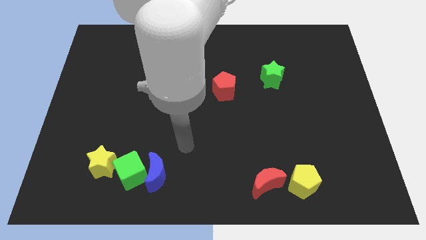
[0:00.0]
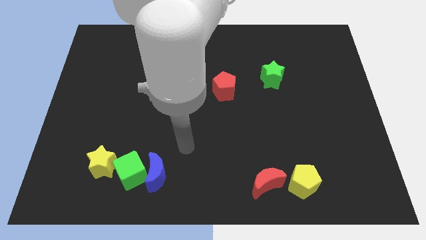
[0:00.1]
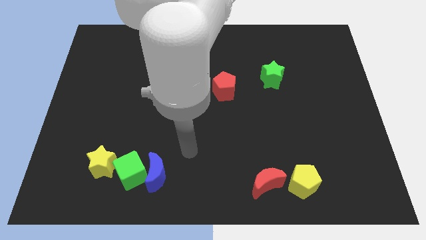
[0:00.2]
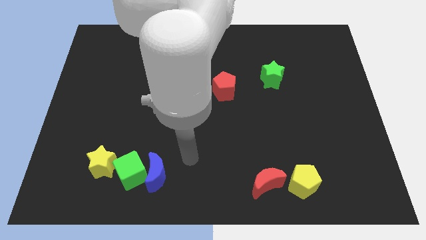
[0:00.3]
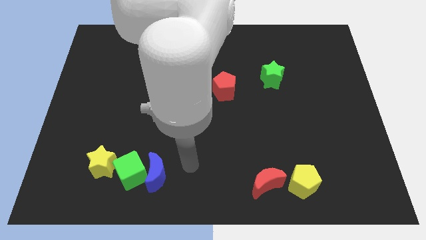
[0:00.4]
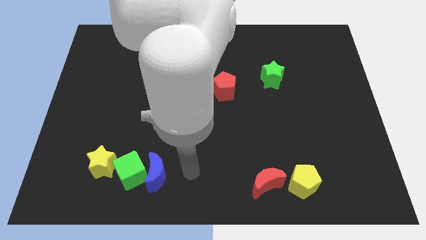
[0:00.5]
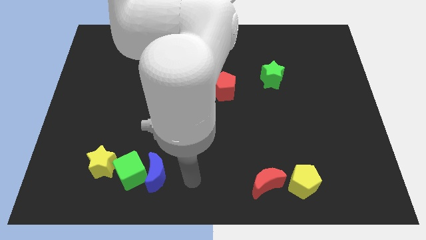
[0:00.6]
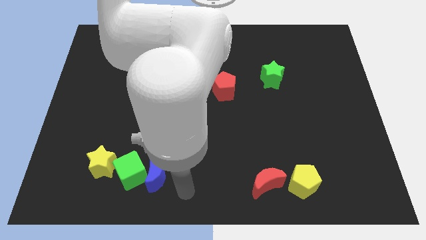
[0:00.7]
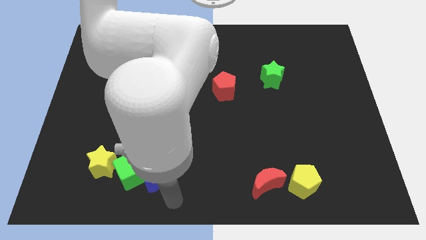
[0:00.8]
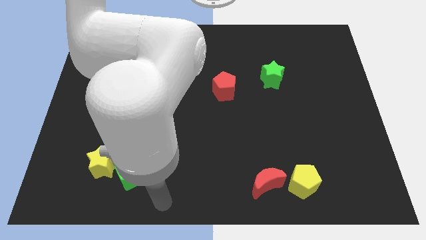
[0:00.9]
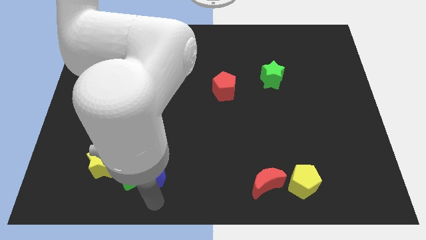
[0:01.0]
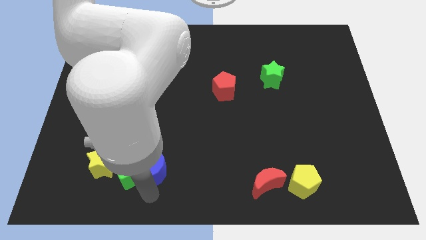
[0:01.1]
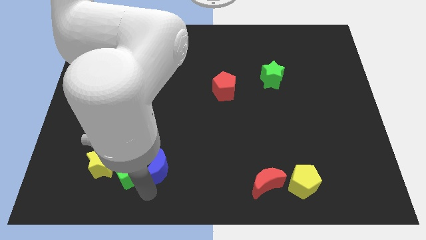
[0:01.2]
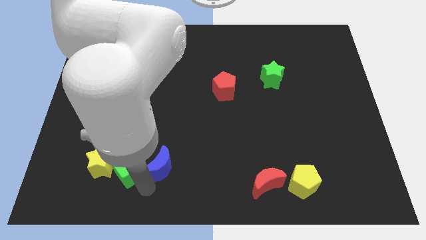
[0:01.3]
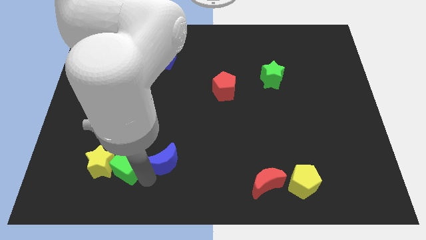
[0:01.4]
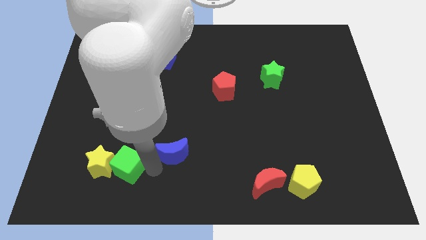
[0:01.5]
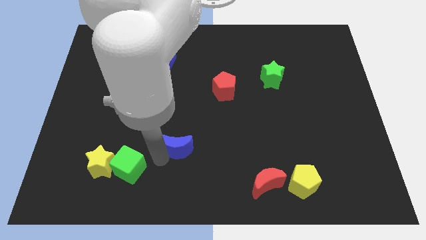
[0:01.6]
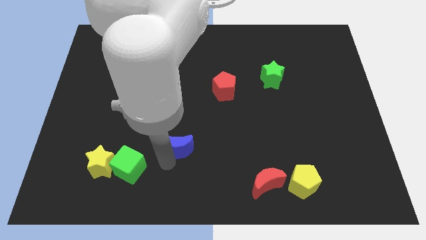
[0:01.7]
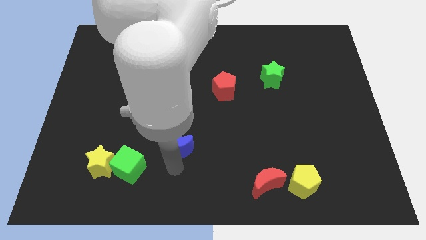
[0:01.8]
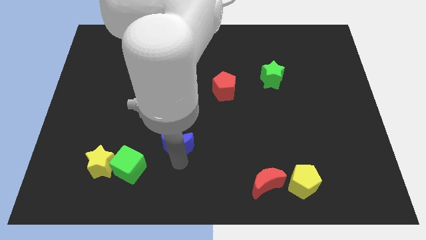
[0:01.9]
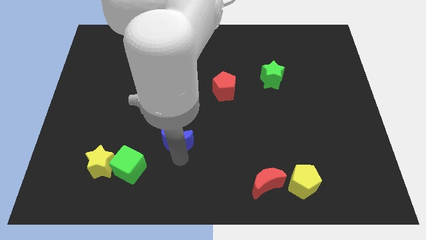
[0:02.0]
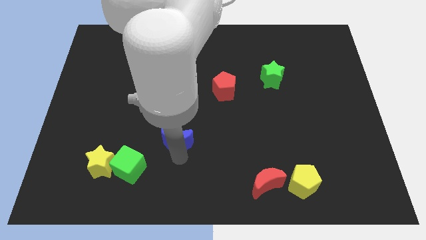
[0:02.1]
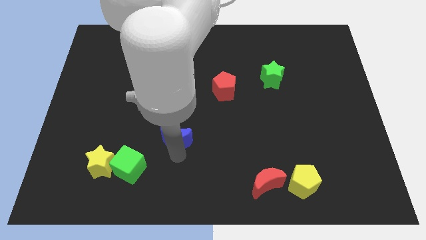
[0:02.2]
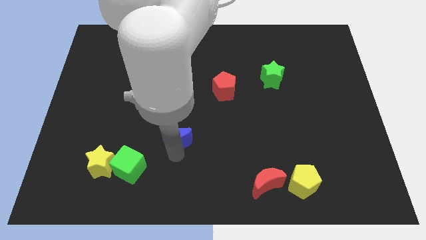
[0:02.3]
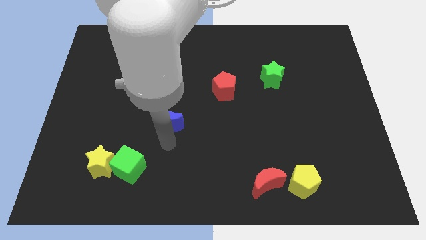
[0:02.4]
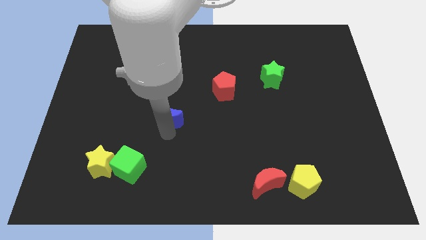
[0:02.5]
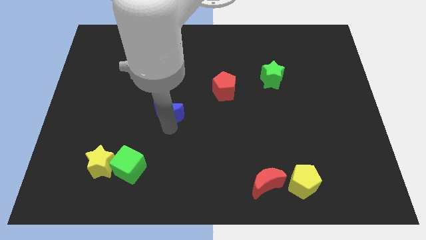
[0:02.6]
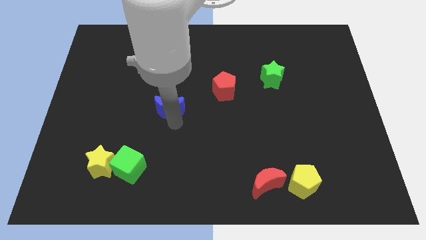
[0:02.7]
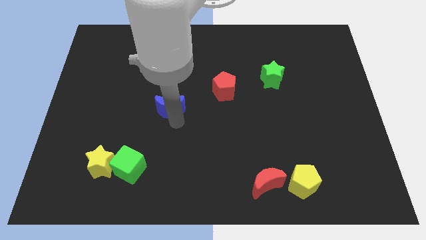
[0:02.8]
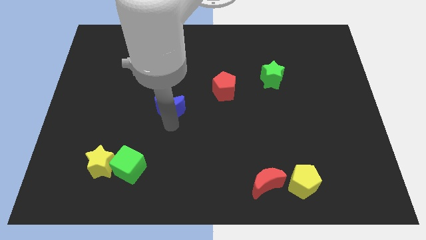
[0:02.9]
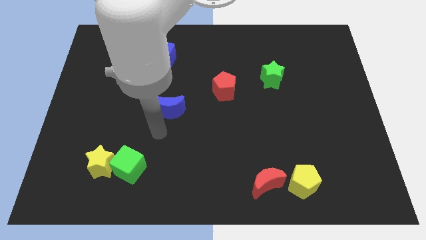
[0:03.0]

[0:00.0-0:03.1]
move the blue crescent away from the green cube

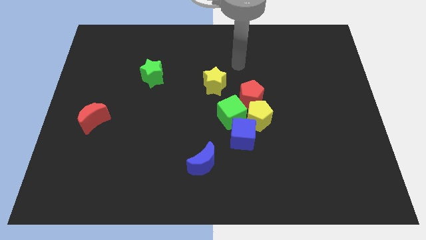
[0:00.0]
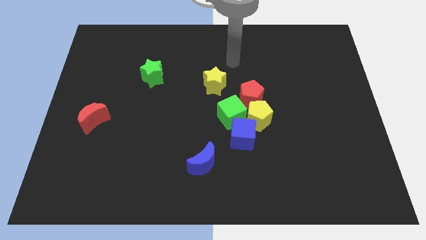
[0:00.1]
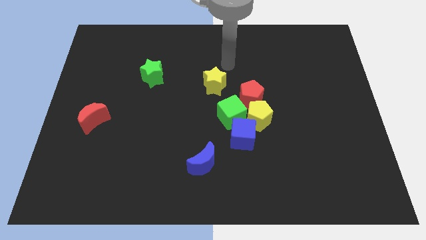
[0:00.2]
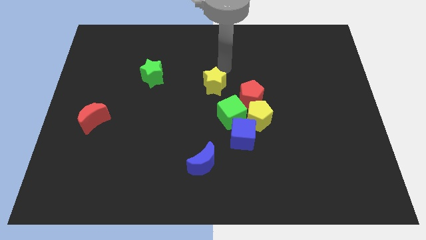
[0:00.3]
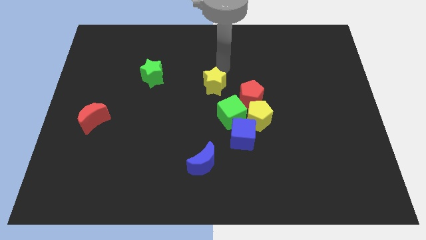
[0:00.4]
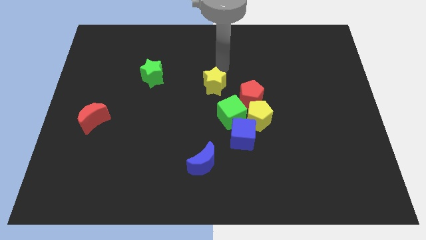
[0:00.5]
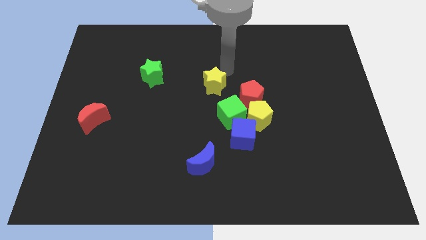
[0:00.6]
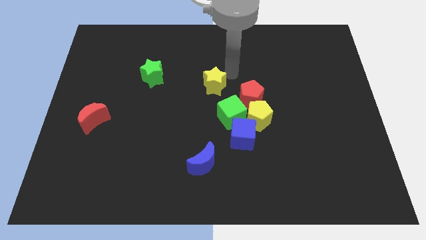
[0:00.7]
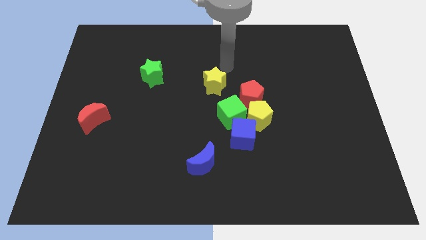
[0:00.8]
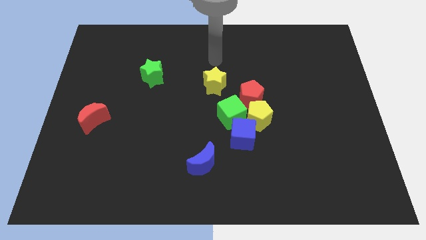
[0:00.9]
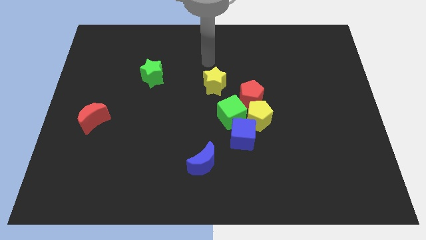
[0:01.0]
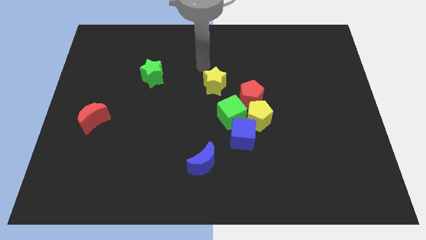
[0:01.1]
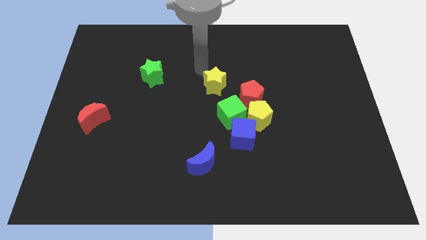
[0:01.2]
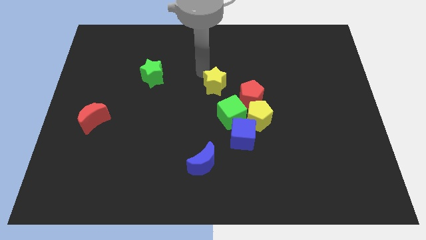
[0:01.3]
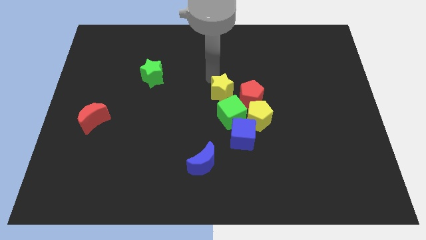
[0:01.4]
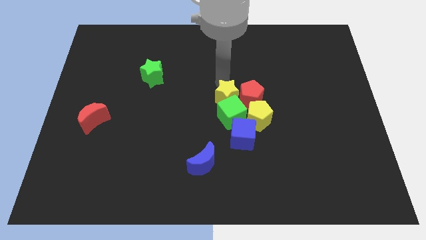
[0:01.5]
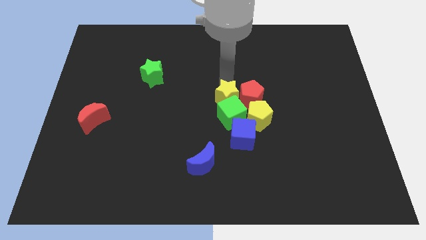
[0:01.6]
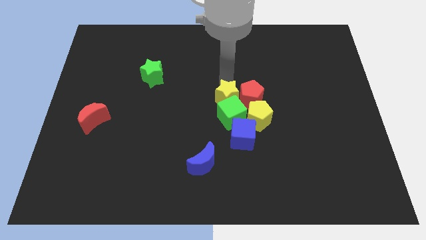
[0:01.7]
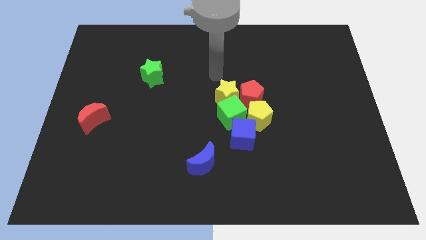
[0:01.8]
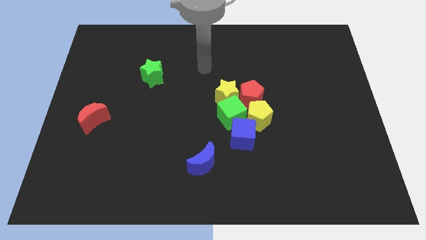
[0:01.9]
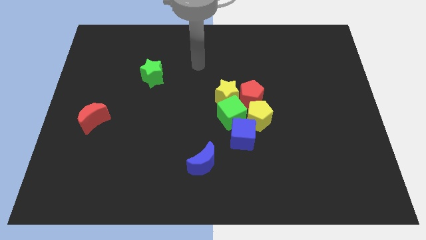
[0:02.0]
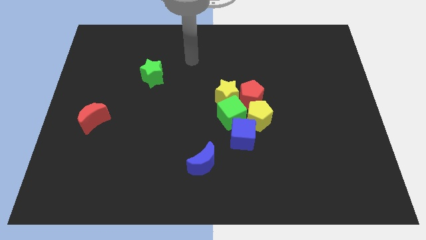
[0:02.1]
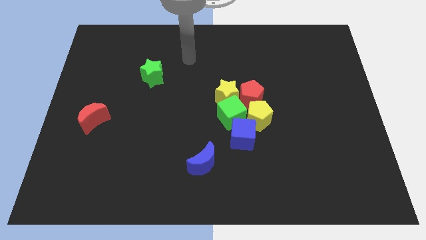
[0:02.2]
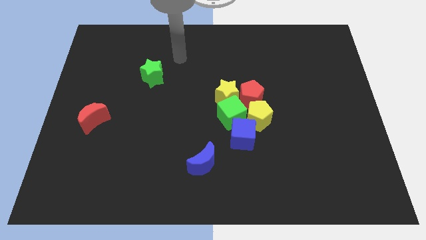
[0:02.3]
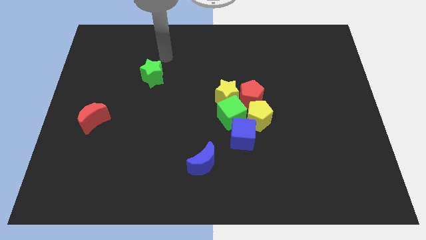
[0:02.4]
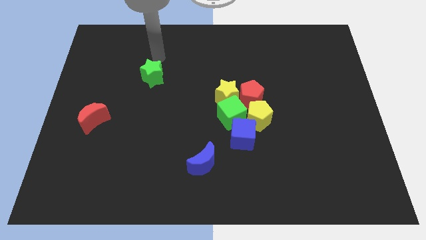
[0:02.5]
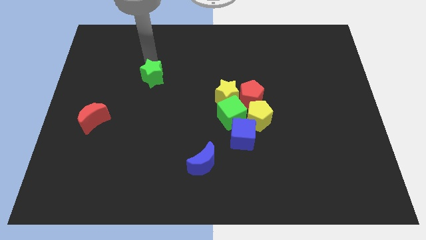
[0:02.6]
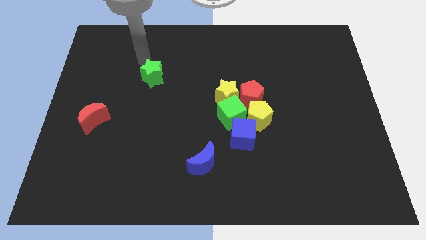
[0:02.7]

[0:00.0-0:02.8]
move the yellow star into the green cube

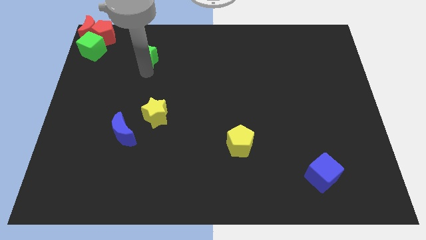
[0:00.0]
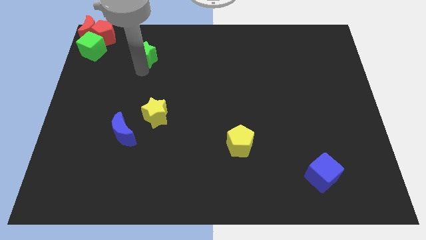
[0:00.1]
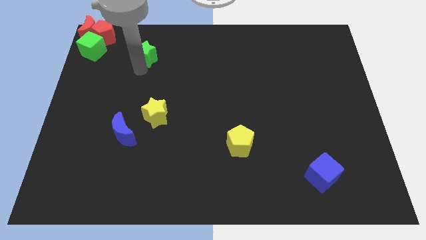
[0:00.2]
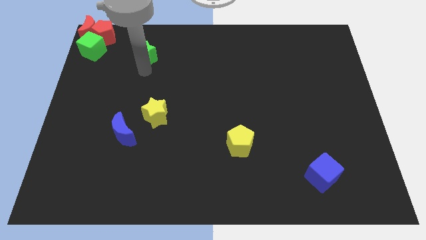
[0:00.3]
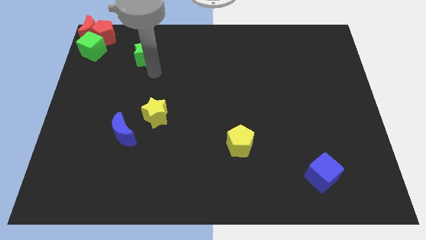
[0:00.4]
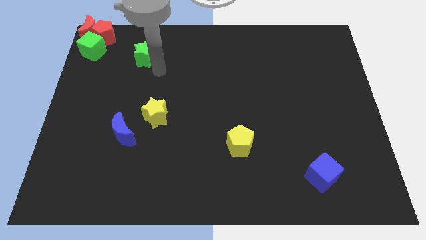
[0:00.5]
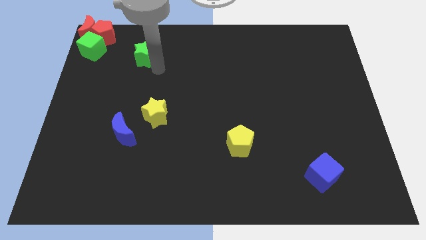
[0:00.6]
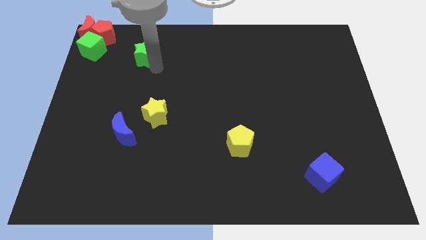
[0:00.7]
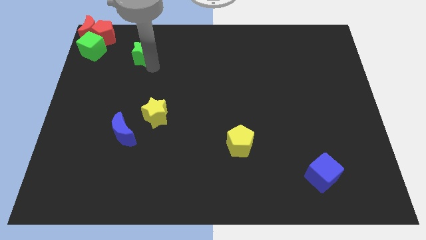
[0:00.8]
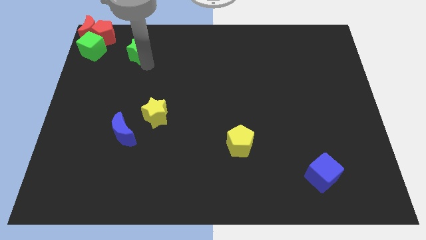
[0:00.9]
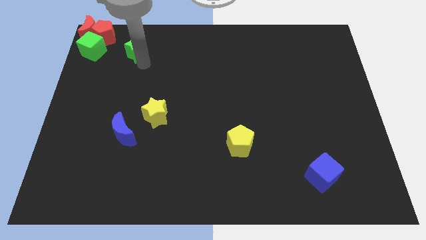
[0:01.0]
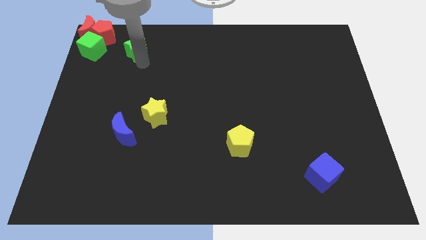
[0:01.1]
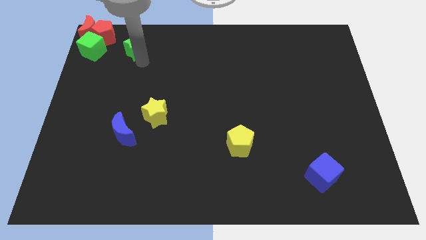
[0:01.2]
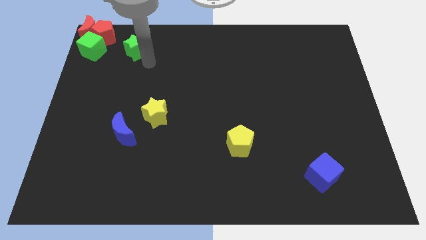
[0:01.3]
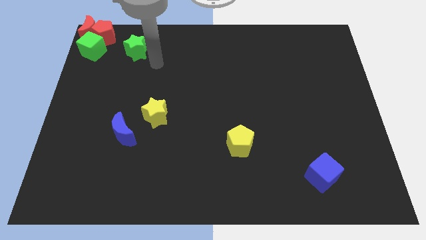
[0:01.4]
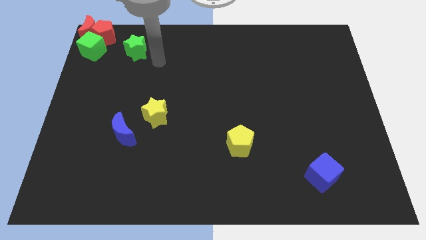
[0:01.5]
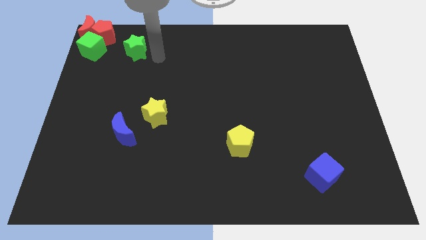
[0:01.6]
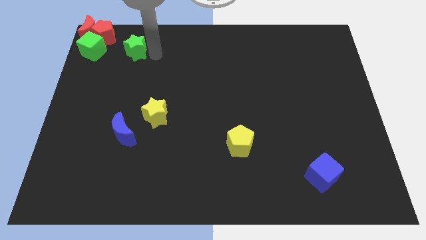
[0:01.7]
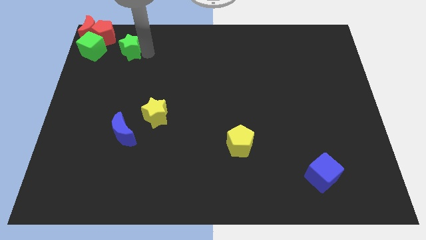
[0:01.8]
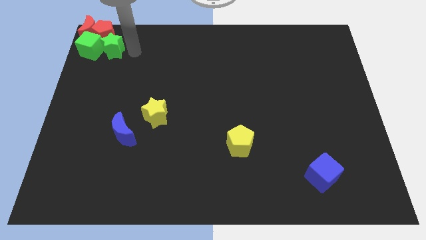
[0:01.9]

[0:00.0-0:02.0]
push the green star into the green cube

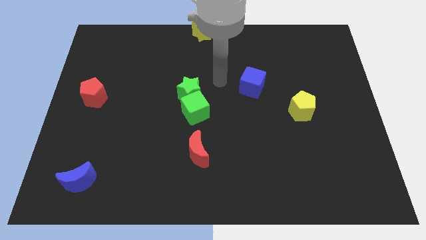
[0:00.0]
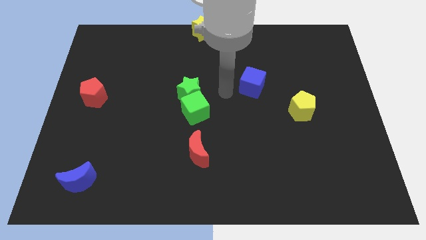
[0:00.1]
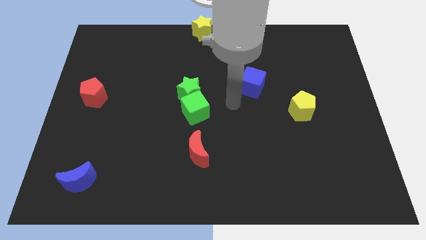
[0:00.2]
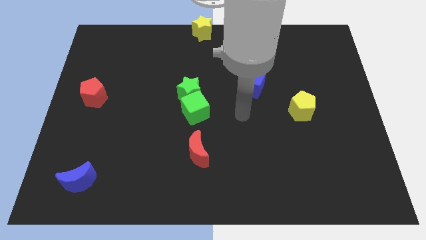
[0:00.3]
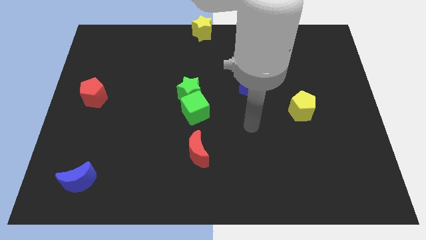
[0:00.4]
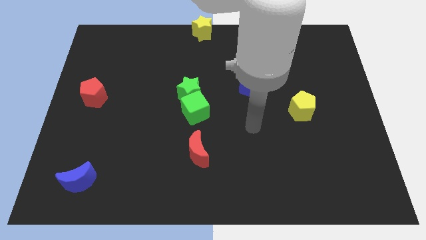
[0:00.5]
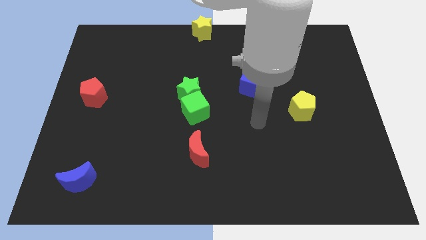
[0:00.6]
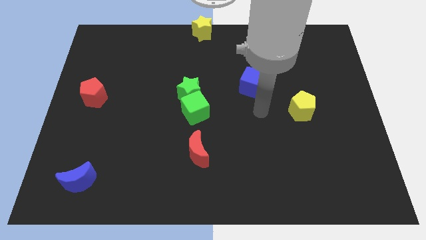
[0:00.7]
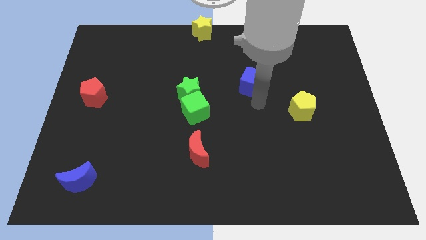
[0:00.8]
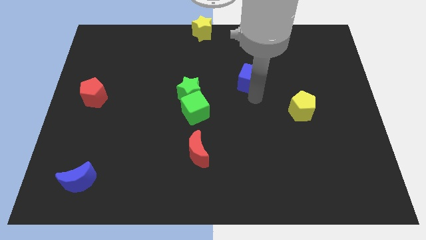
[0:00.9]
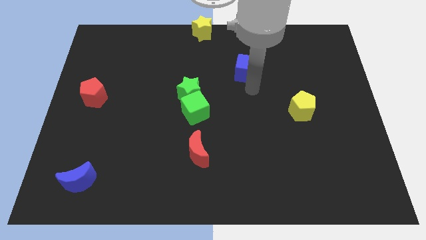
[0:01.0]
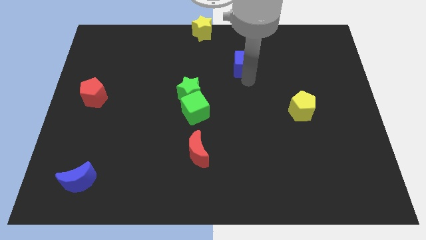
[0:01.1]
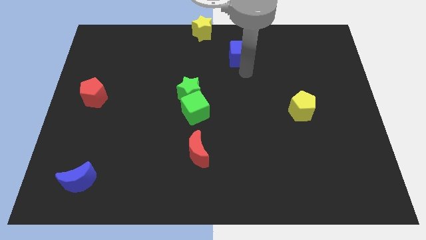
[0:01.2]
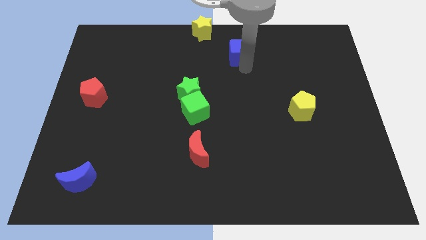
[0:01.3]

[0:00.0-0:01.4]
slide the blue cube slightly up
